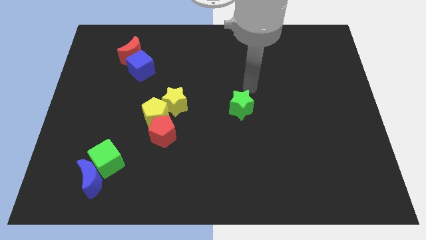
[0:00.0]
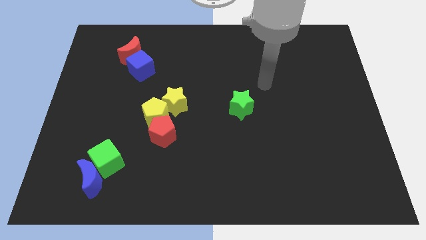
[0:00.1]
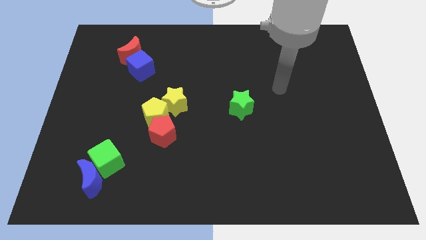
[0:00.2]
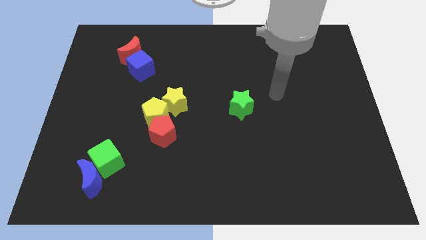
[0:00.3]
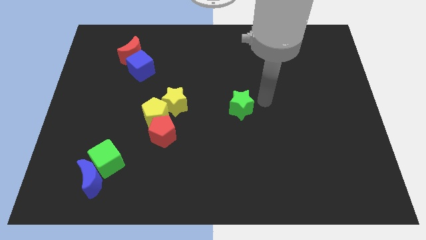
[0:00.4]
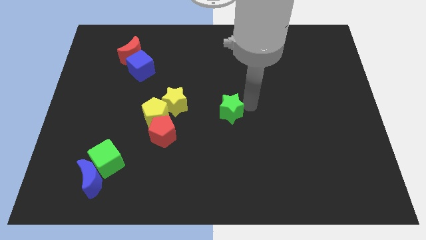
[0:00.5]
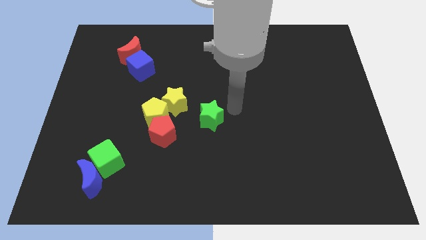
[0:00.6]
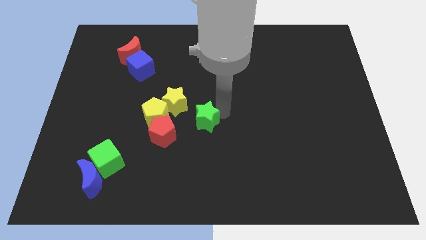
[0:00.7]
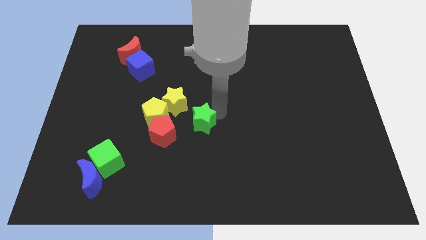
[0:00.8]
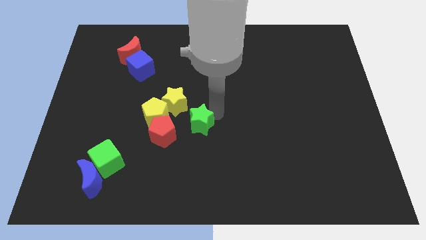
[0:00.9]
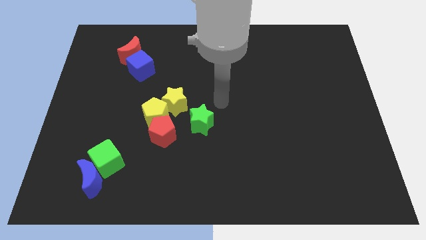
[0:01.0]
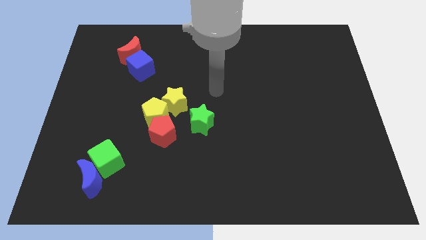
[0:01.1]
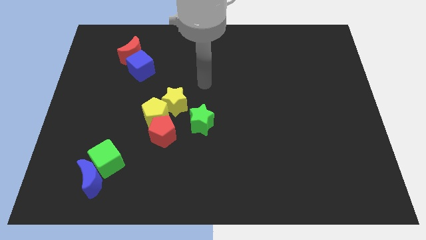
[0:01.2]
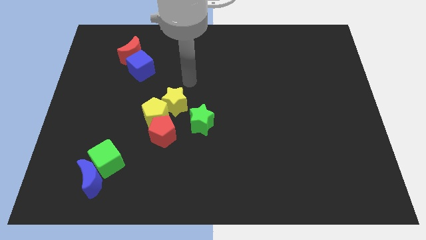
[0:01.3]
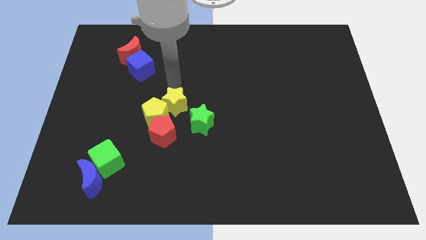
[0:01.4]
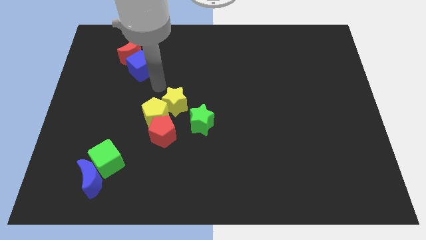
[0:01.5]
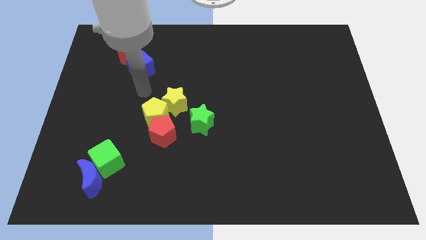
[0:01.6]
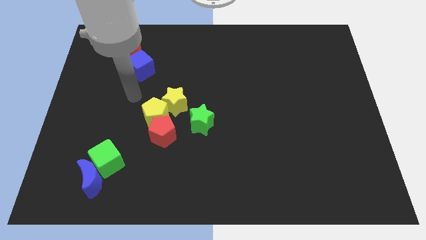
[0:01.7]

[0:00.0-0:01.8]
move the green star towards the yellow star on the center of the board

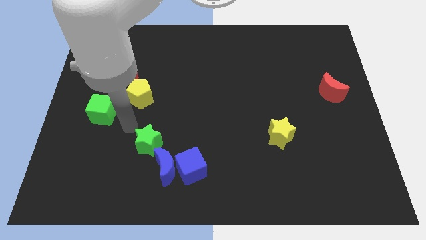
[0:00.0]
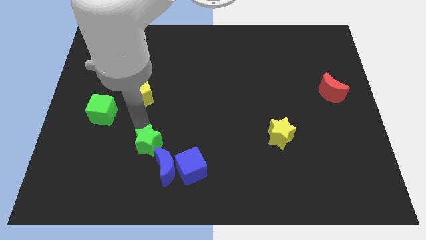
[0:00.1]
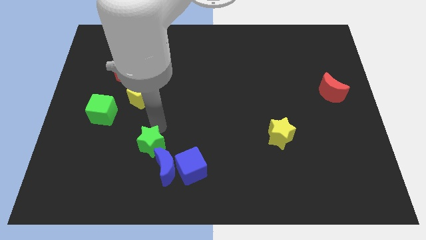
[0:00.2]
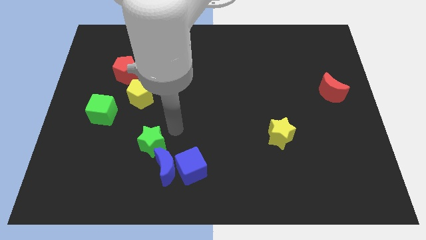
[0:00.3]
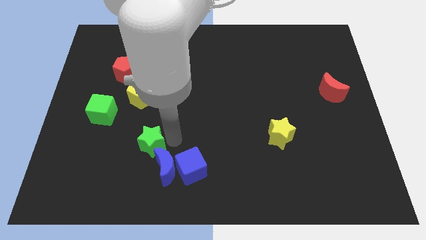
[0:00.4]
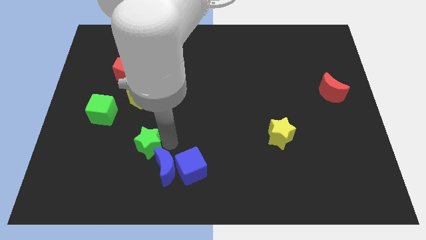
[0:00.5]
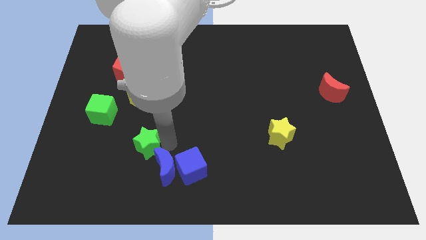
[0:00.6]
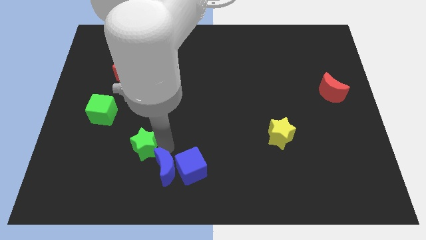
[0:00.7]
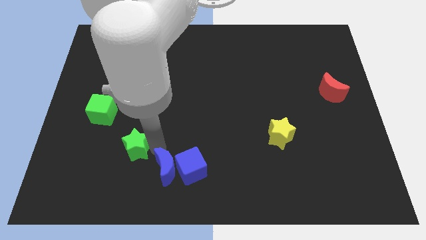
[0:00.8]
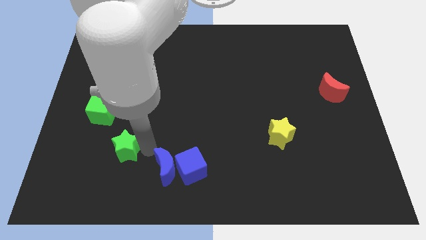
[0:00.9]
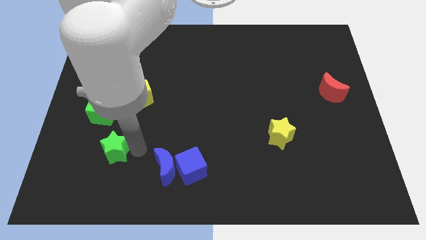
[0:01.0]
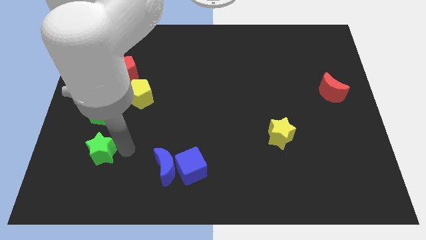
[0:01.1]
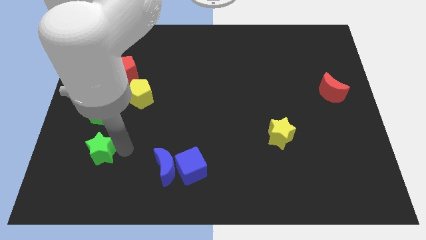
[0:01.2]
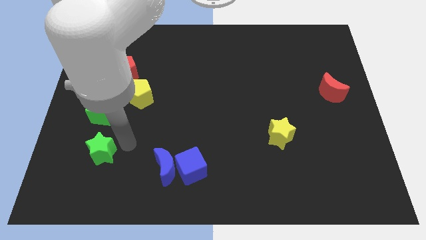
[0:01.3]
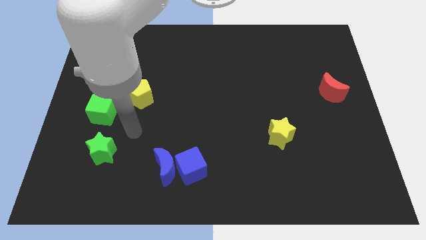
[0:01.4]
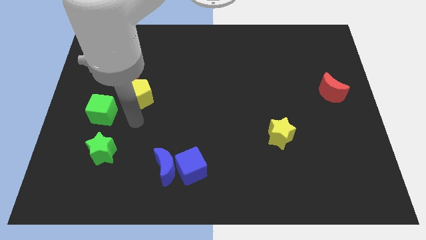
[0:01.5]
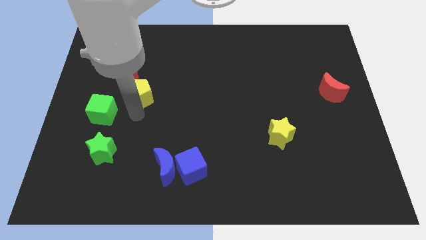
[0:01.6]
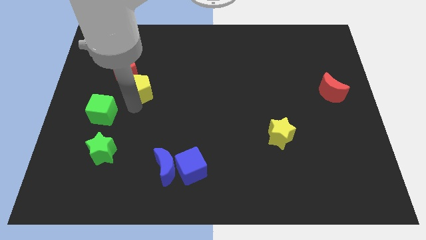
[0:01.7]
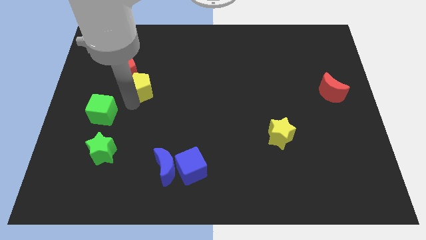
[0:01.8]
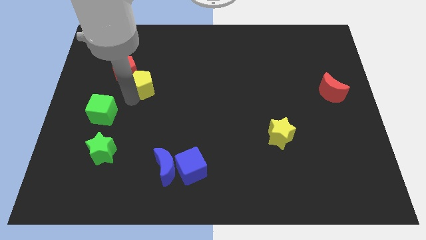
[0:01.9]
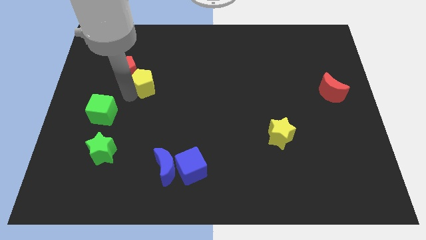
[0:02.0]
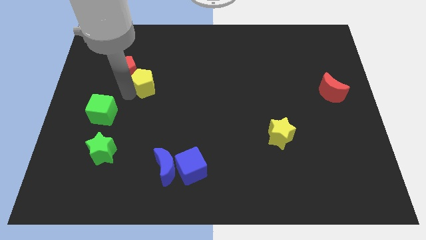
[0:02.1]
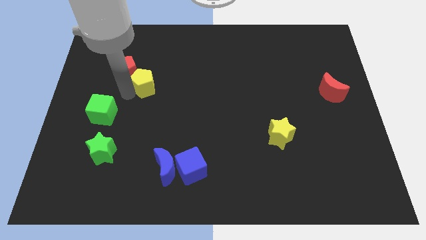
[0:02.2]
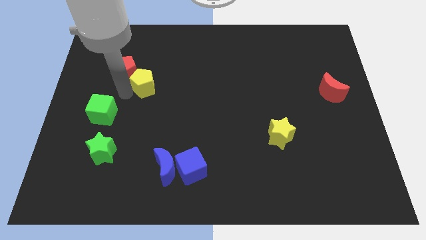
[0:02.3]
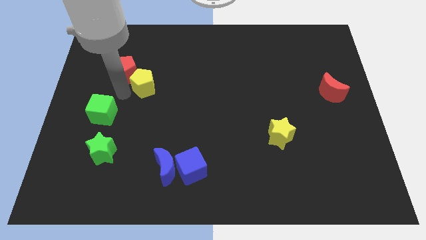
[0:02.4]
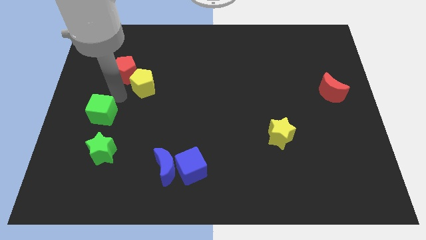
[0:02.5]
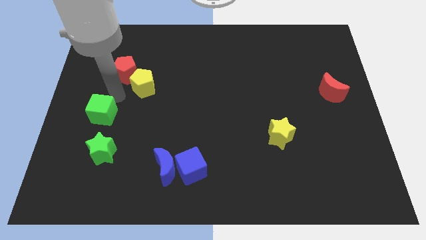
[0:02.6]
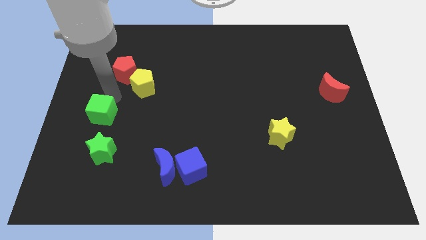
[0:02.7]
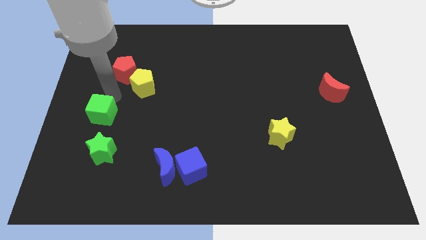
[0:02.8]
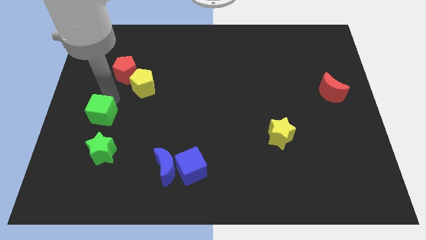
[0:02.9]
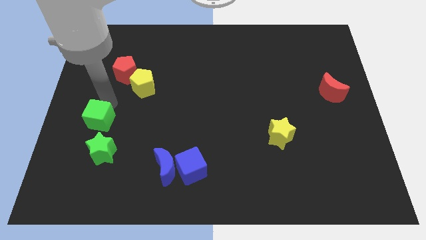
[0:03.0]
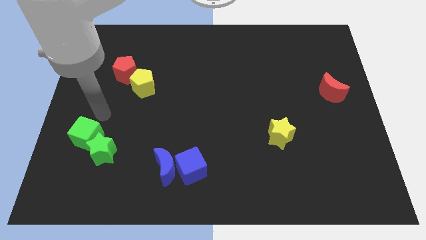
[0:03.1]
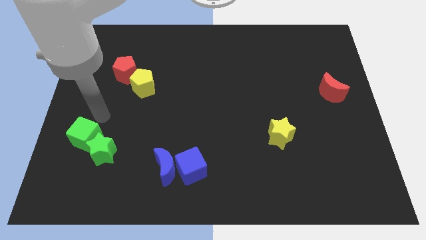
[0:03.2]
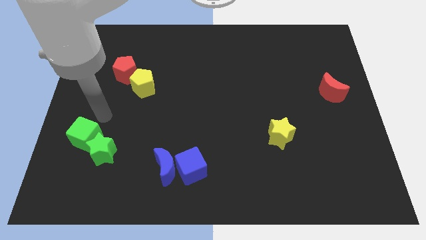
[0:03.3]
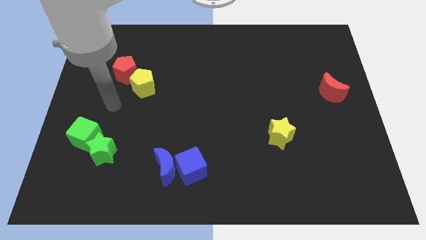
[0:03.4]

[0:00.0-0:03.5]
place the green star and green cube to the bottom left side of the board

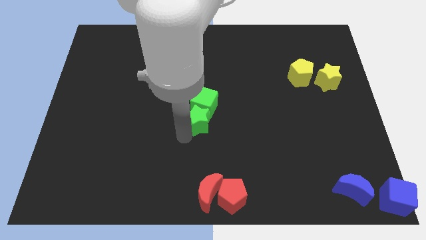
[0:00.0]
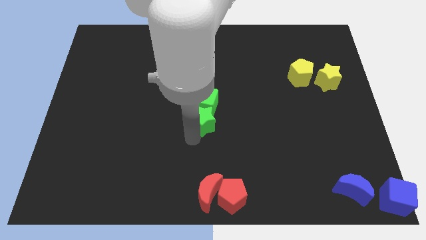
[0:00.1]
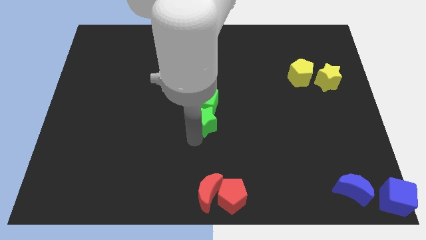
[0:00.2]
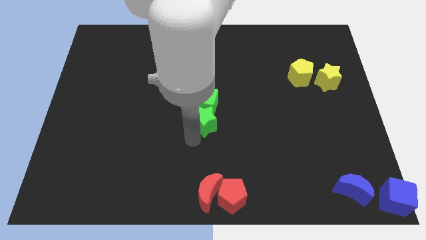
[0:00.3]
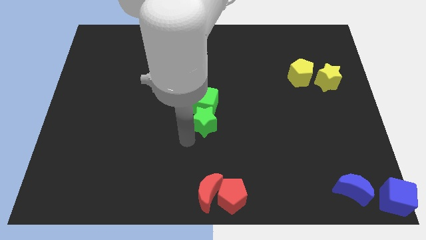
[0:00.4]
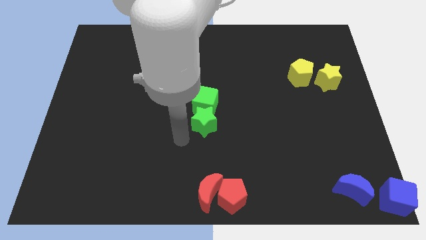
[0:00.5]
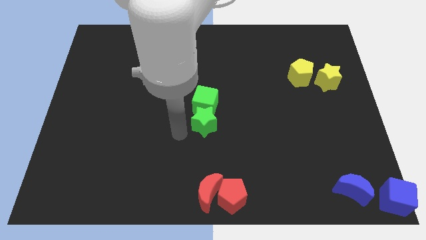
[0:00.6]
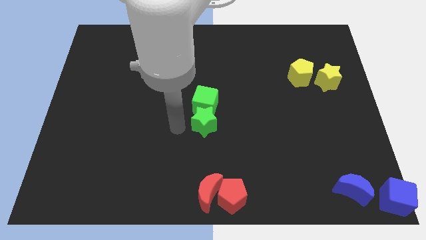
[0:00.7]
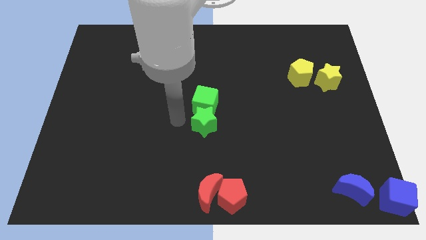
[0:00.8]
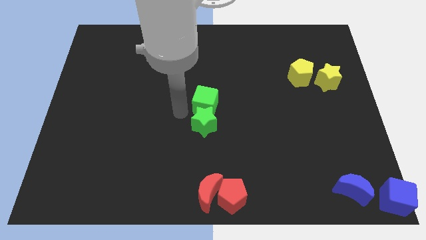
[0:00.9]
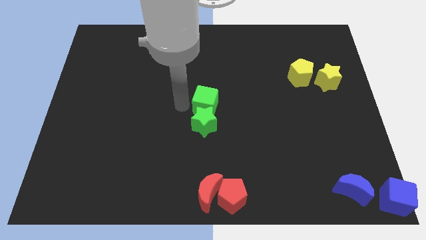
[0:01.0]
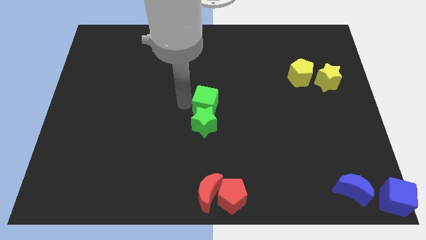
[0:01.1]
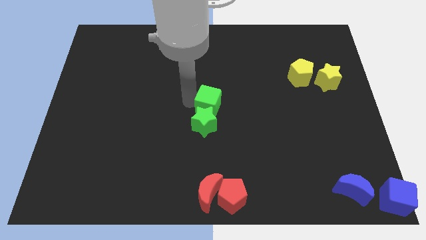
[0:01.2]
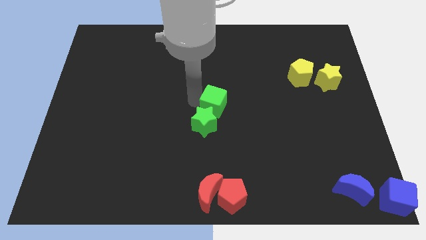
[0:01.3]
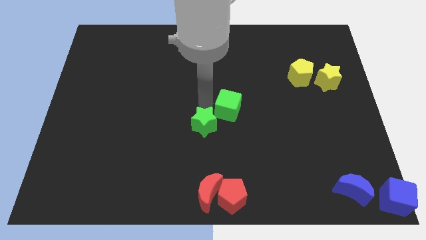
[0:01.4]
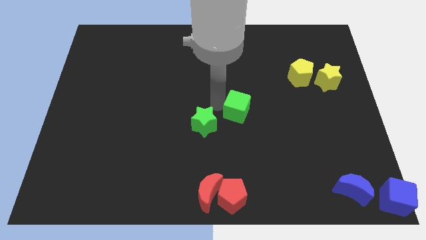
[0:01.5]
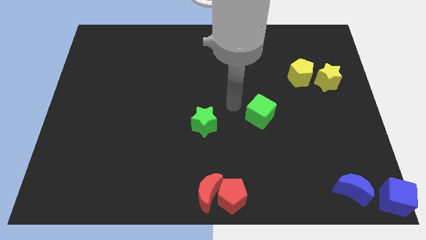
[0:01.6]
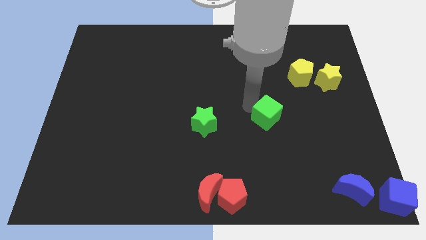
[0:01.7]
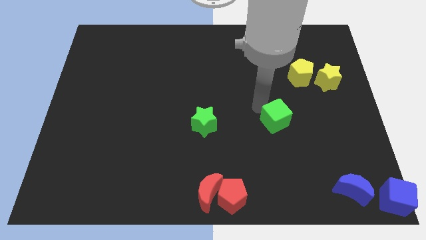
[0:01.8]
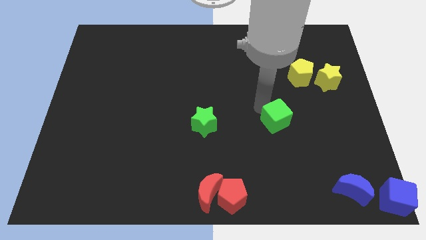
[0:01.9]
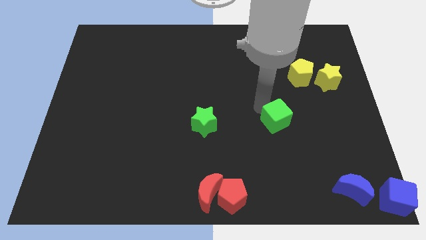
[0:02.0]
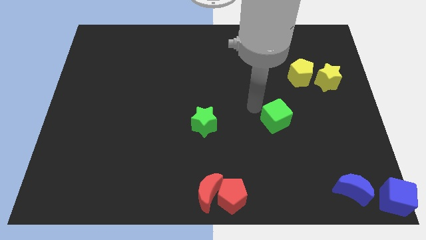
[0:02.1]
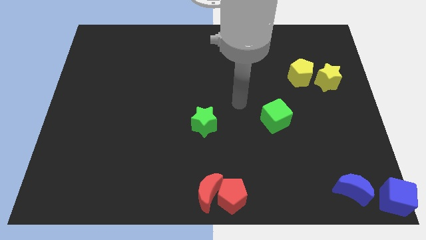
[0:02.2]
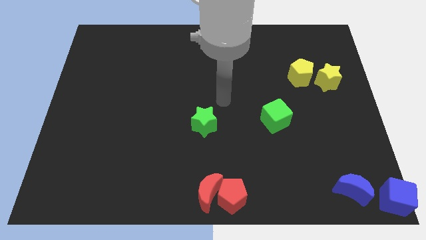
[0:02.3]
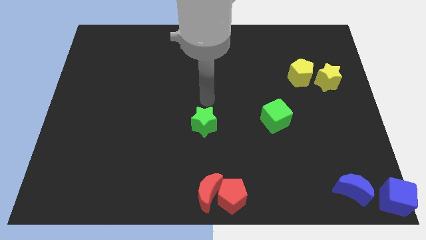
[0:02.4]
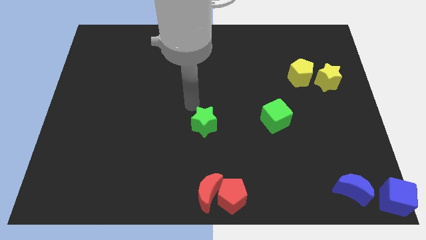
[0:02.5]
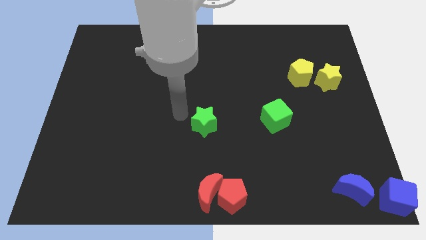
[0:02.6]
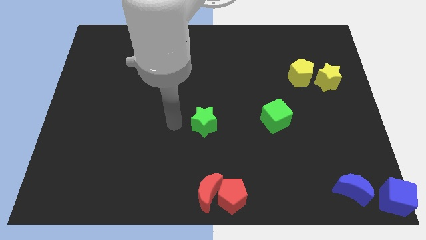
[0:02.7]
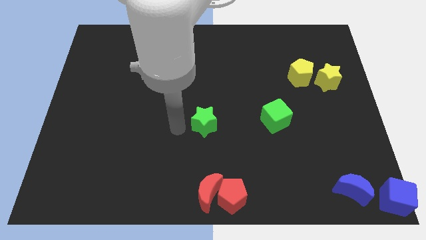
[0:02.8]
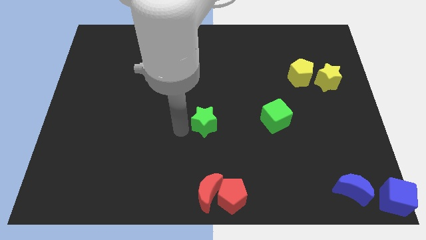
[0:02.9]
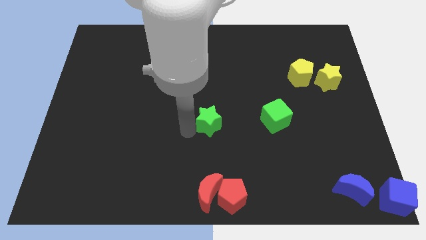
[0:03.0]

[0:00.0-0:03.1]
separate green cube from green star

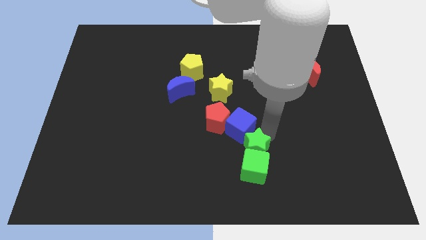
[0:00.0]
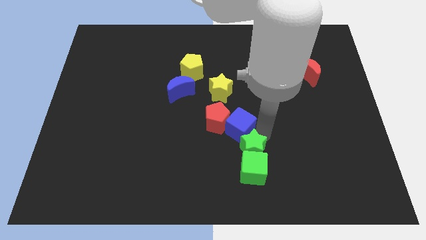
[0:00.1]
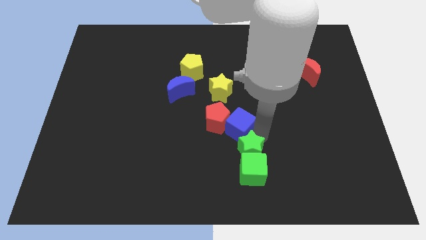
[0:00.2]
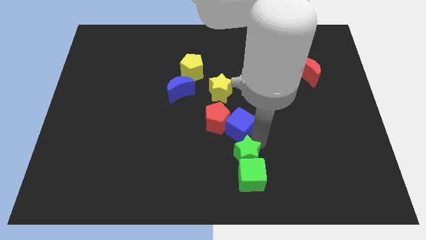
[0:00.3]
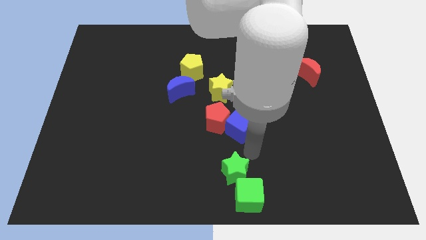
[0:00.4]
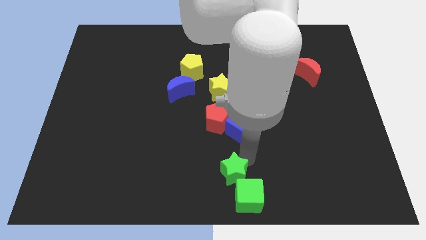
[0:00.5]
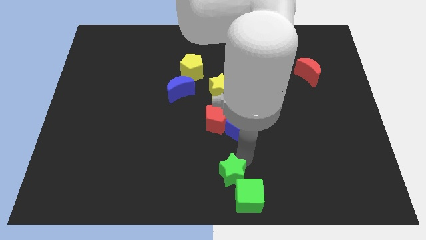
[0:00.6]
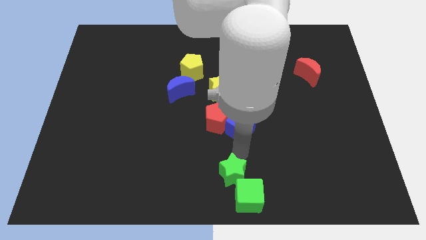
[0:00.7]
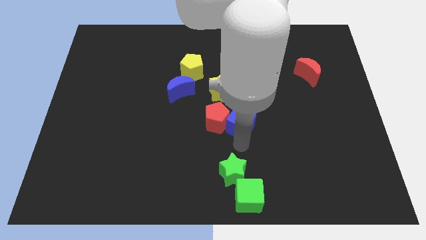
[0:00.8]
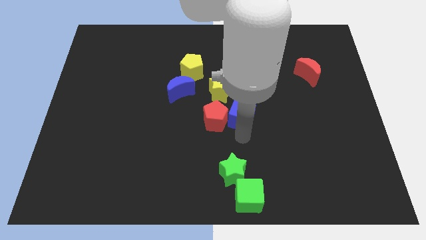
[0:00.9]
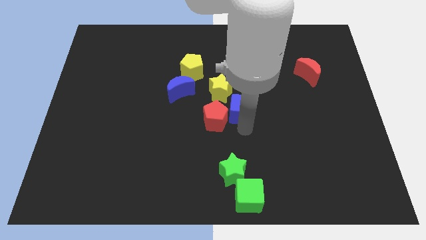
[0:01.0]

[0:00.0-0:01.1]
move both the green blocks together at the bottom center of the board
